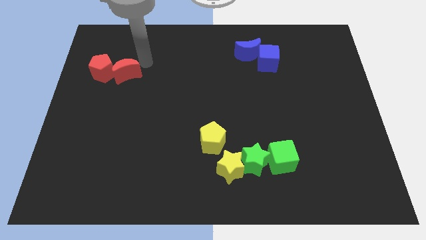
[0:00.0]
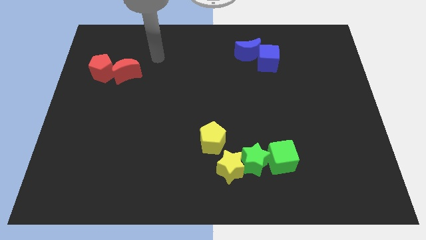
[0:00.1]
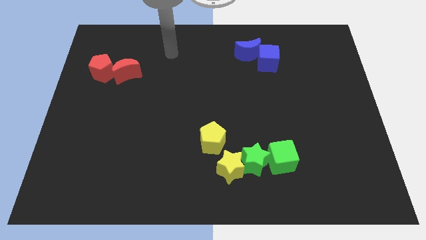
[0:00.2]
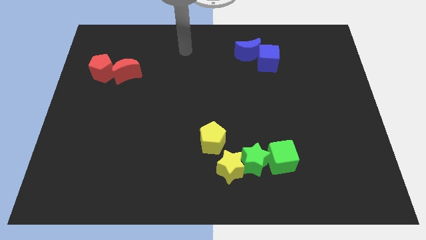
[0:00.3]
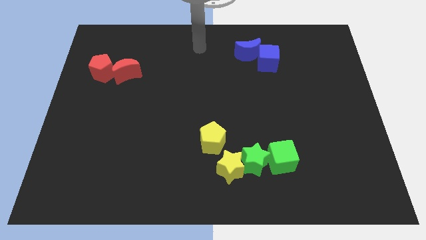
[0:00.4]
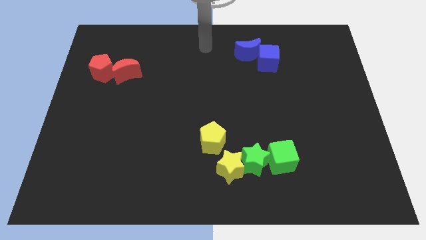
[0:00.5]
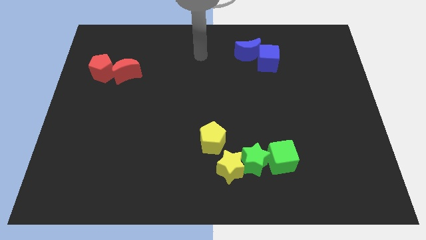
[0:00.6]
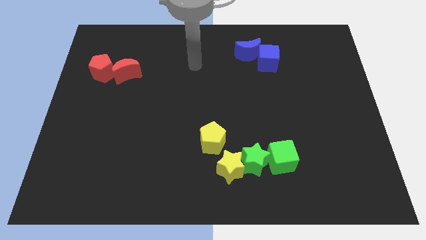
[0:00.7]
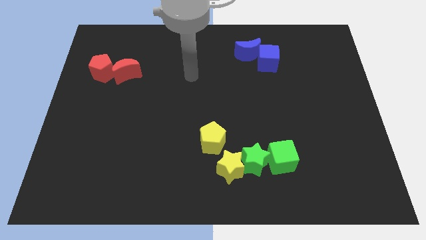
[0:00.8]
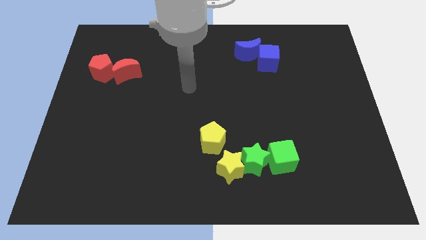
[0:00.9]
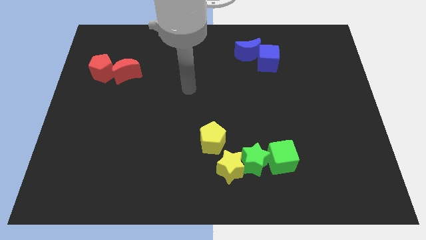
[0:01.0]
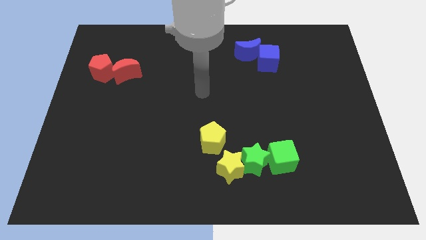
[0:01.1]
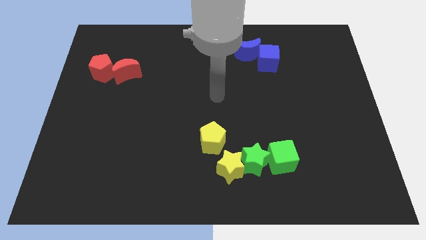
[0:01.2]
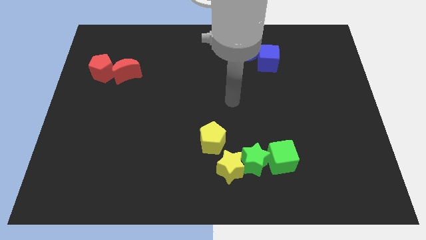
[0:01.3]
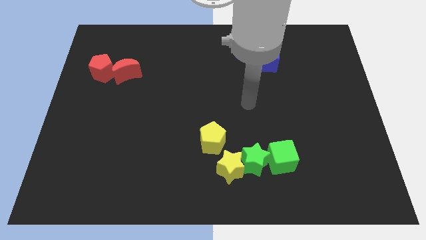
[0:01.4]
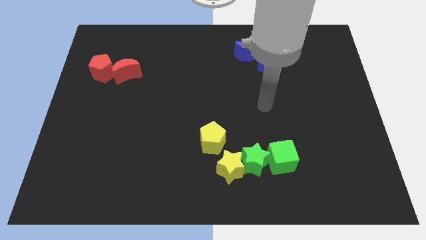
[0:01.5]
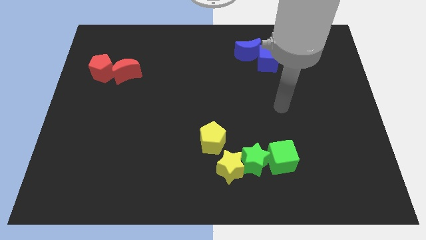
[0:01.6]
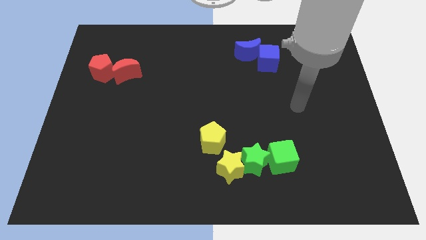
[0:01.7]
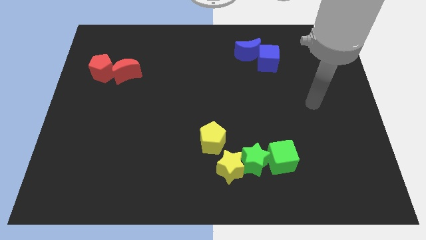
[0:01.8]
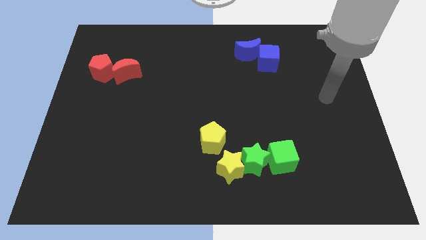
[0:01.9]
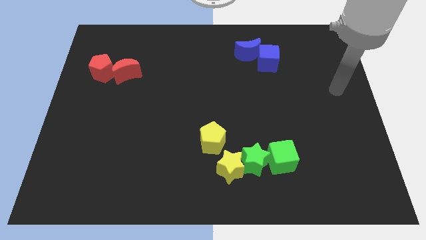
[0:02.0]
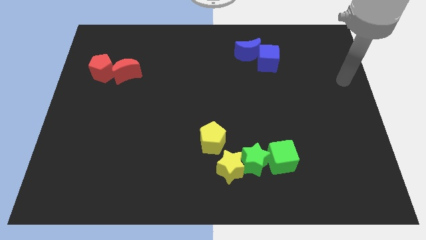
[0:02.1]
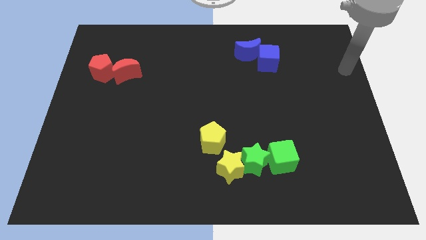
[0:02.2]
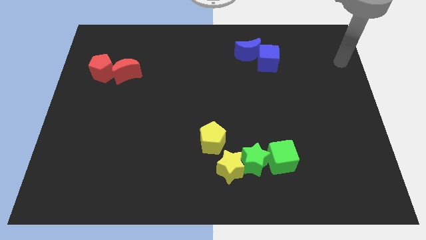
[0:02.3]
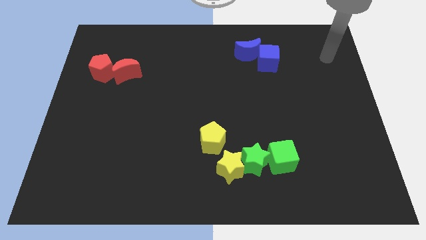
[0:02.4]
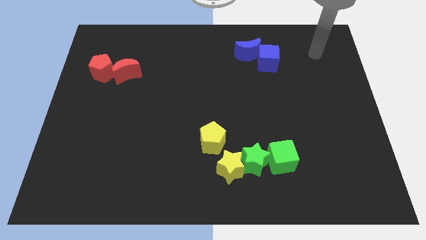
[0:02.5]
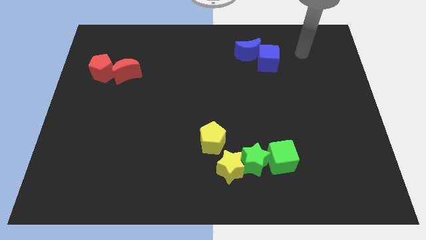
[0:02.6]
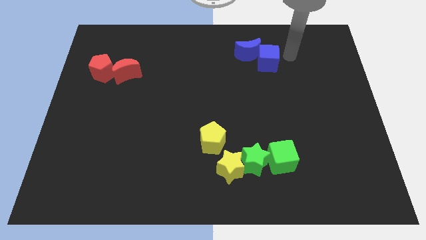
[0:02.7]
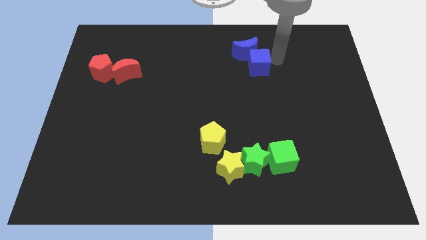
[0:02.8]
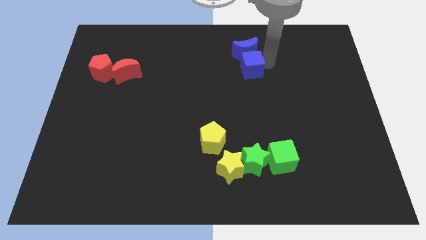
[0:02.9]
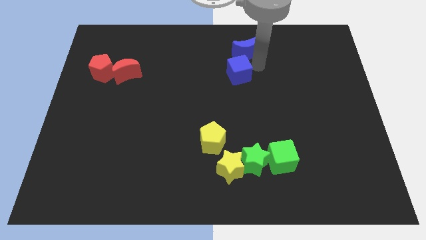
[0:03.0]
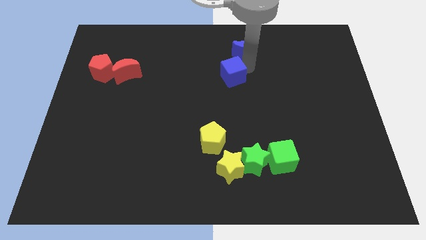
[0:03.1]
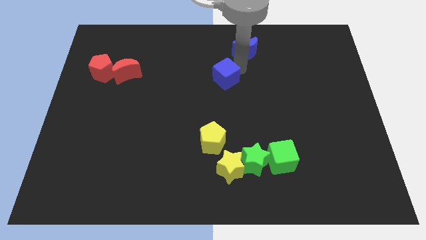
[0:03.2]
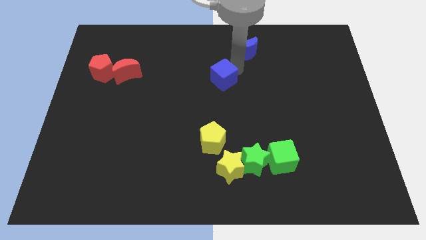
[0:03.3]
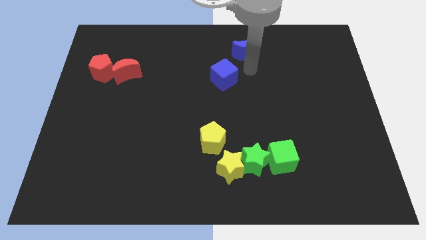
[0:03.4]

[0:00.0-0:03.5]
separate the blue cube from the blue moon

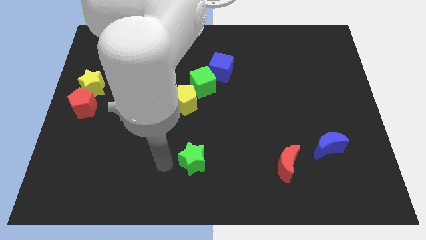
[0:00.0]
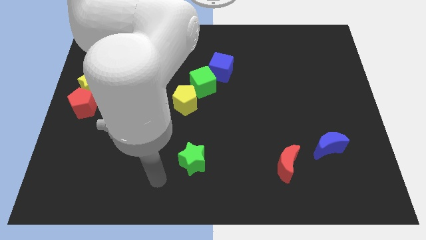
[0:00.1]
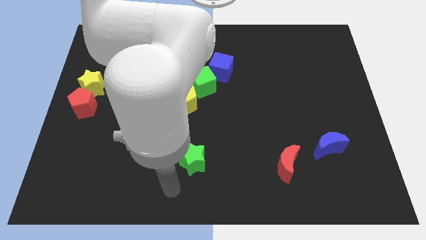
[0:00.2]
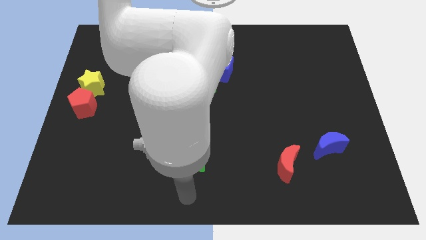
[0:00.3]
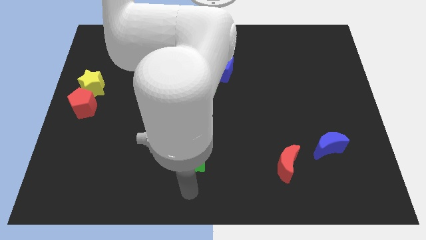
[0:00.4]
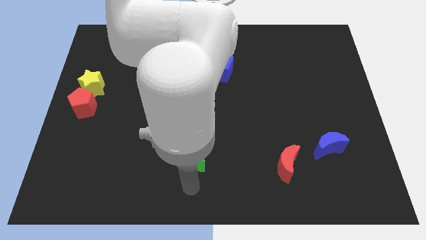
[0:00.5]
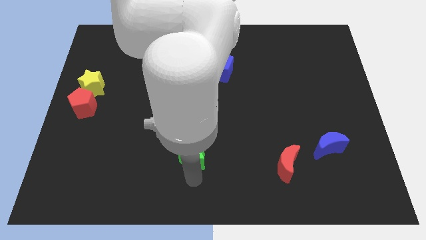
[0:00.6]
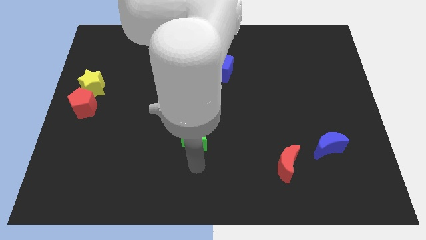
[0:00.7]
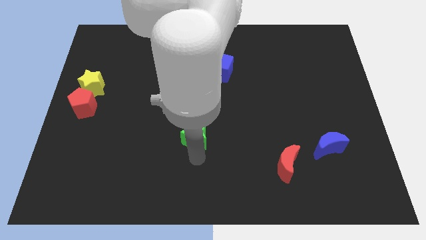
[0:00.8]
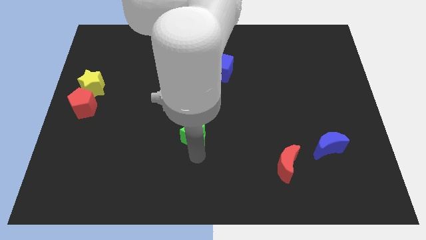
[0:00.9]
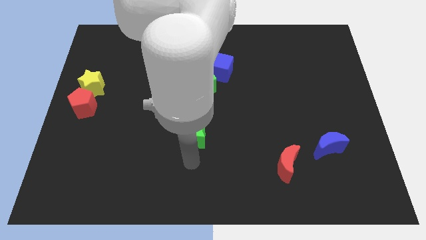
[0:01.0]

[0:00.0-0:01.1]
push green star slightly upwards

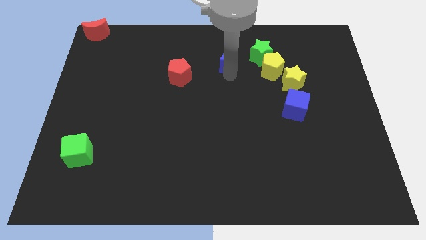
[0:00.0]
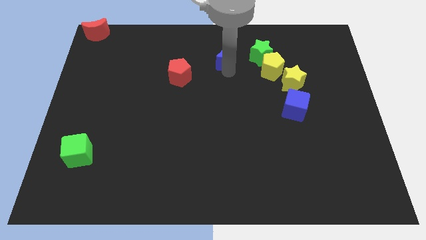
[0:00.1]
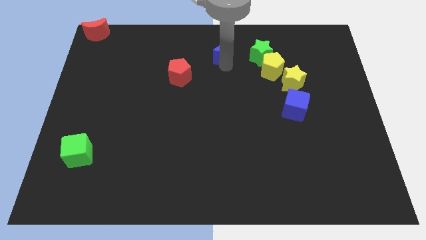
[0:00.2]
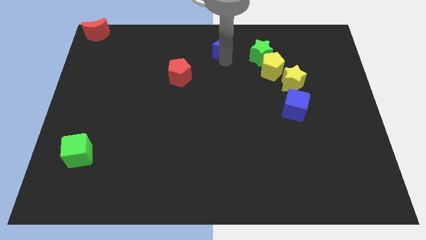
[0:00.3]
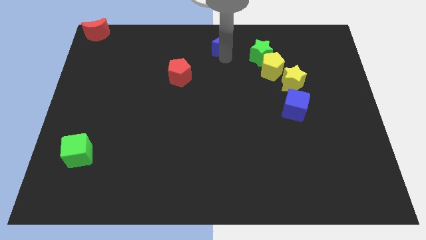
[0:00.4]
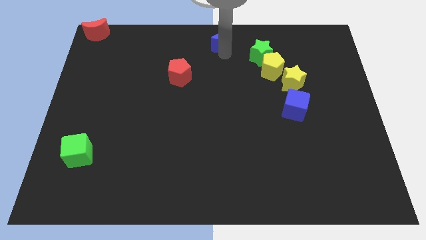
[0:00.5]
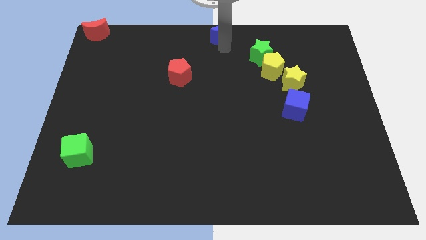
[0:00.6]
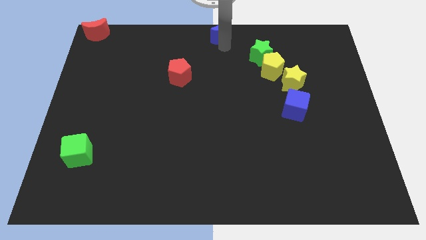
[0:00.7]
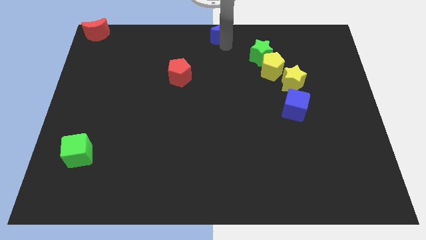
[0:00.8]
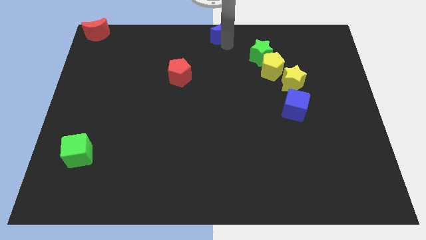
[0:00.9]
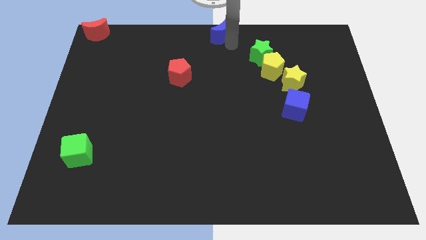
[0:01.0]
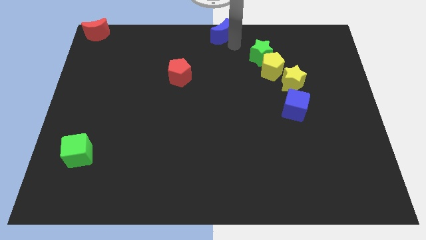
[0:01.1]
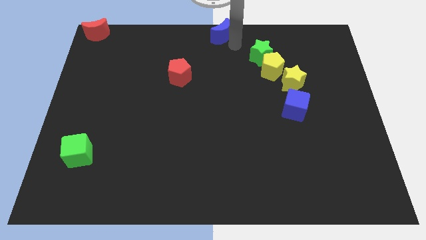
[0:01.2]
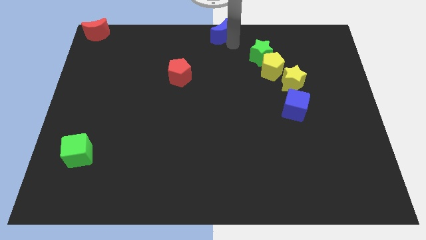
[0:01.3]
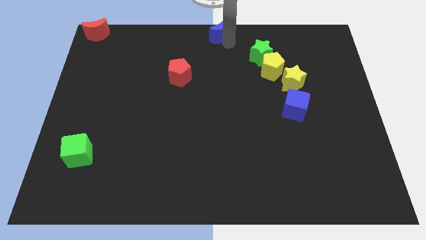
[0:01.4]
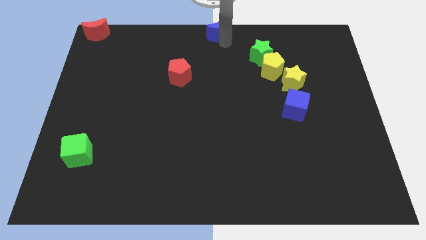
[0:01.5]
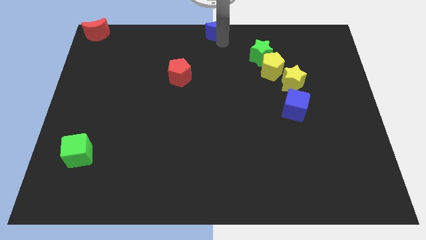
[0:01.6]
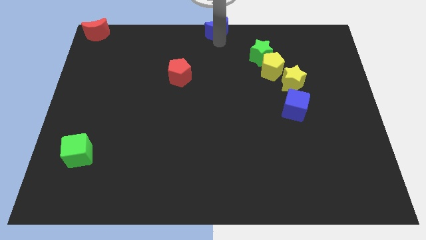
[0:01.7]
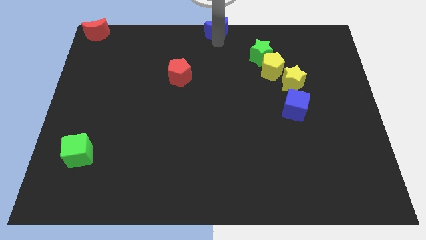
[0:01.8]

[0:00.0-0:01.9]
push the blue crescent to the tp center of the table

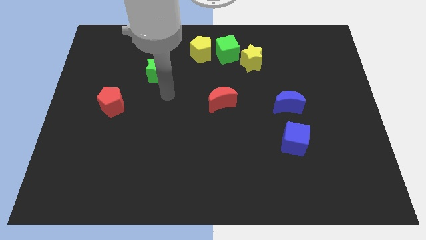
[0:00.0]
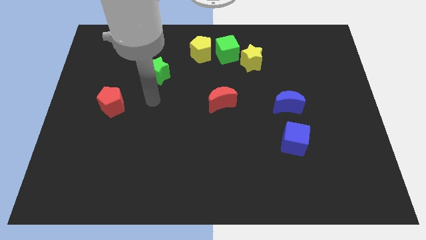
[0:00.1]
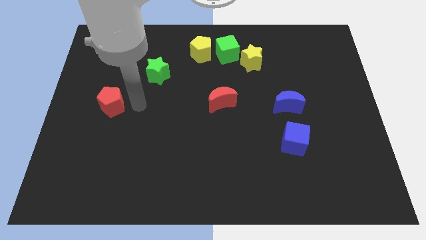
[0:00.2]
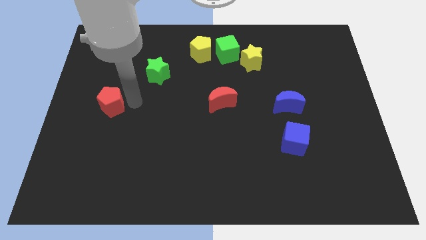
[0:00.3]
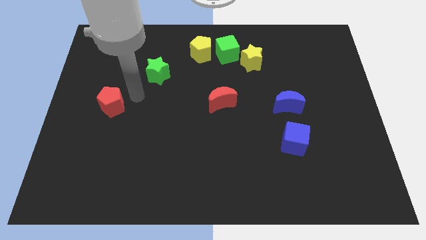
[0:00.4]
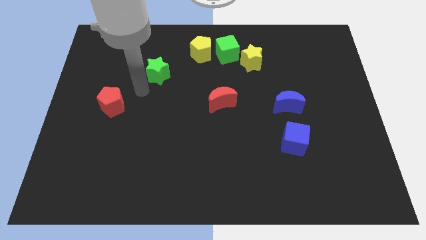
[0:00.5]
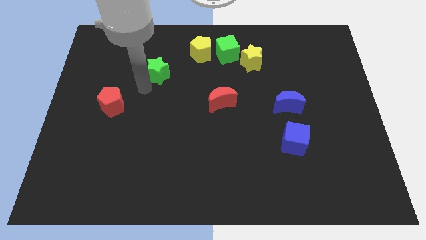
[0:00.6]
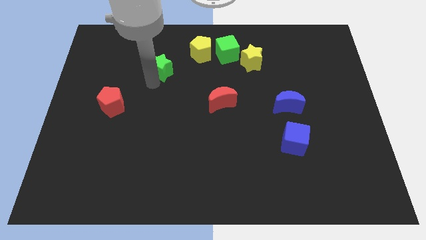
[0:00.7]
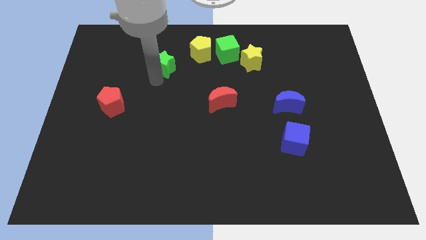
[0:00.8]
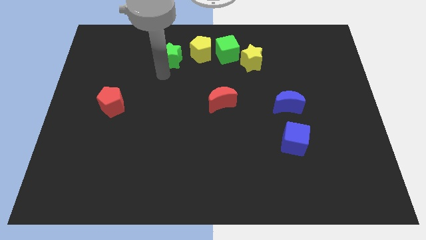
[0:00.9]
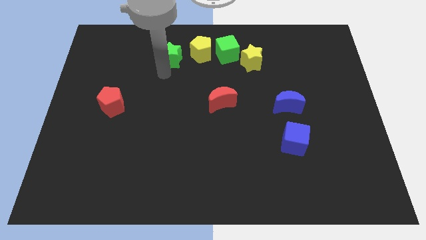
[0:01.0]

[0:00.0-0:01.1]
push the green star to the left of the yellow pentagon

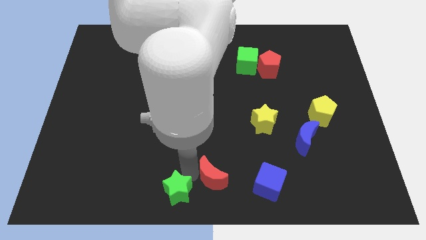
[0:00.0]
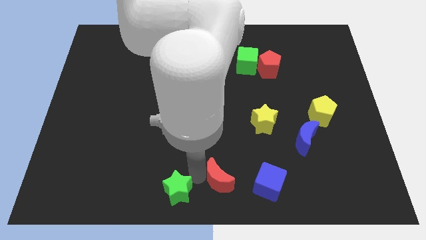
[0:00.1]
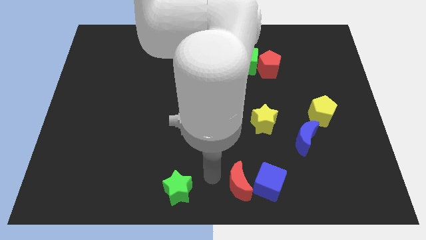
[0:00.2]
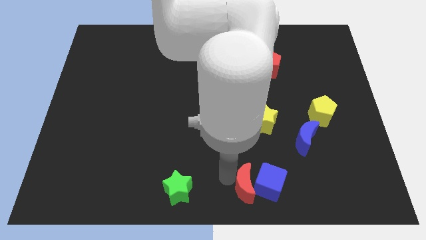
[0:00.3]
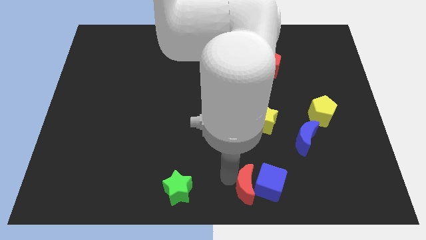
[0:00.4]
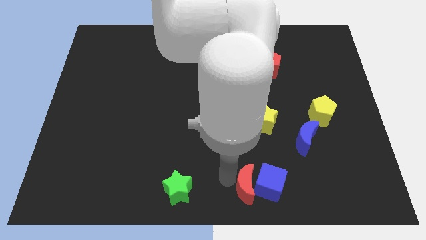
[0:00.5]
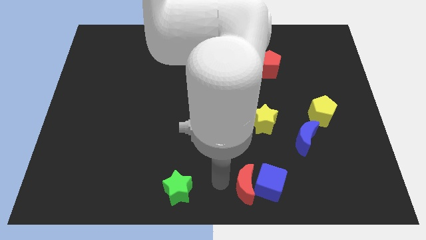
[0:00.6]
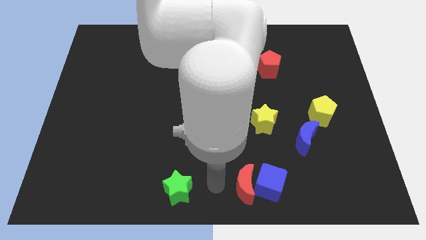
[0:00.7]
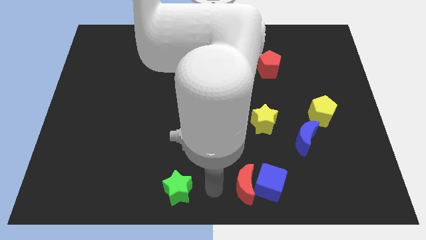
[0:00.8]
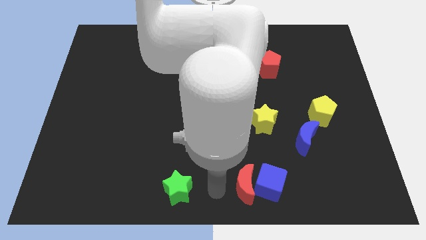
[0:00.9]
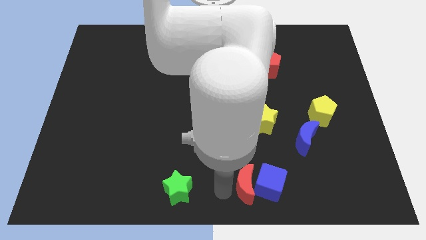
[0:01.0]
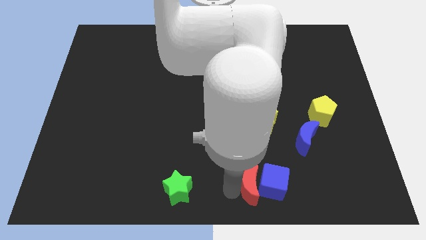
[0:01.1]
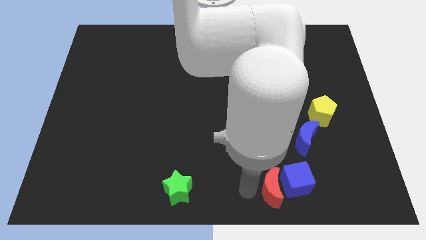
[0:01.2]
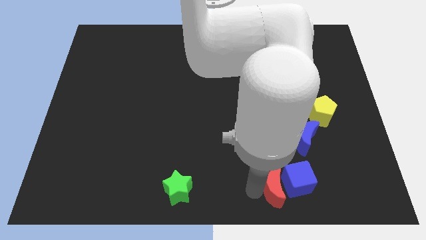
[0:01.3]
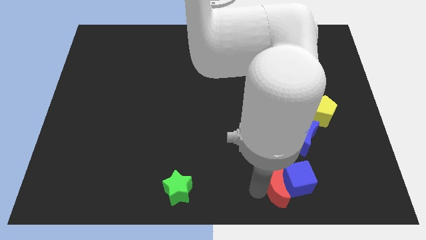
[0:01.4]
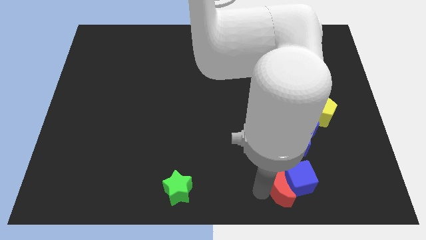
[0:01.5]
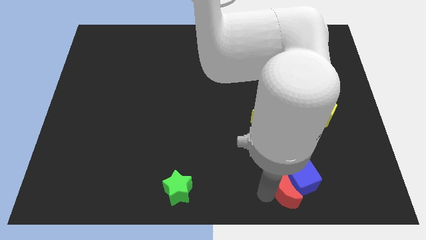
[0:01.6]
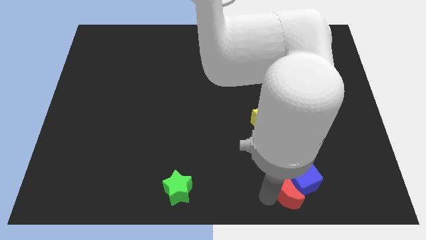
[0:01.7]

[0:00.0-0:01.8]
push the red crescent into the blue cube
